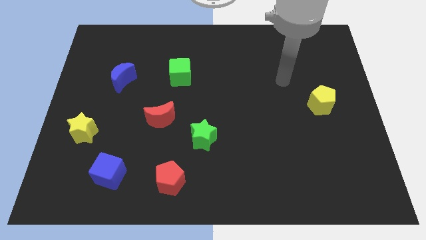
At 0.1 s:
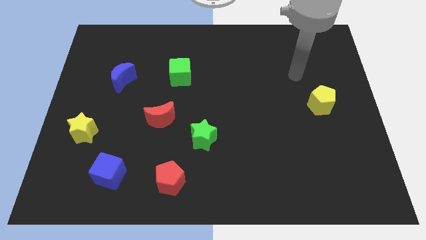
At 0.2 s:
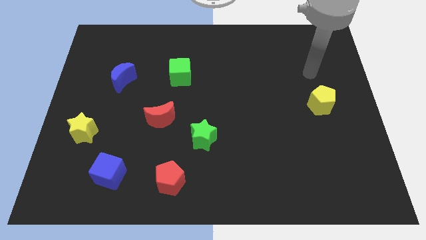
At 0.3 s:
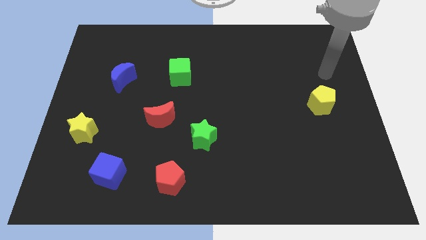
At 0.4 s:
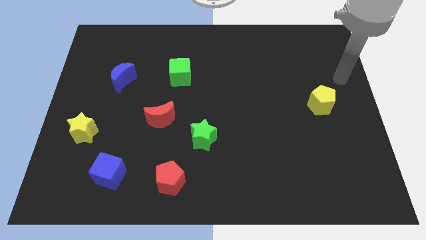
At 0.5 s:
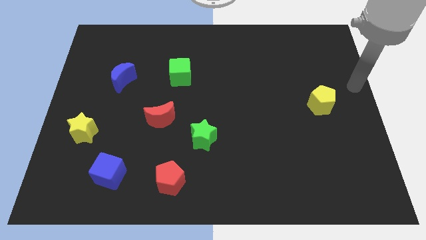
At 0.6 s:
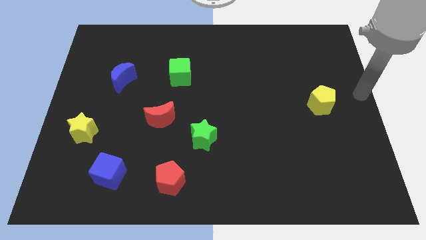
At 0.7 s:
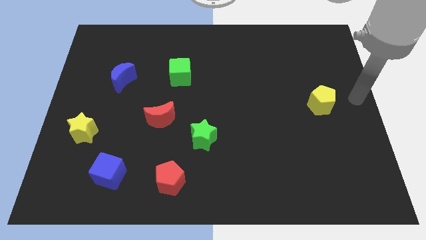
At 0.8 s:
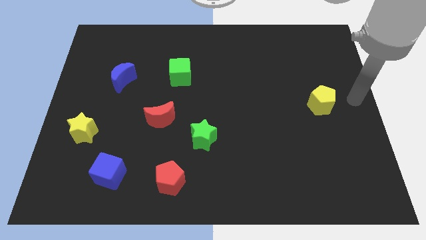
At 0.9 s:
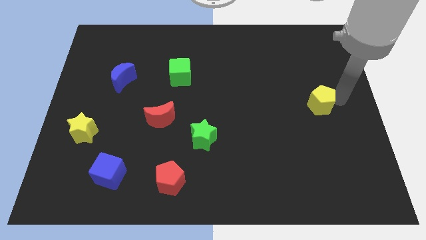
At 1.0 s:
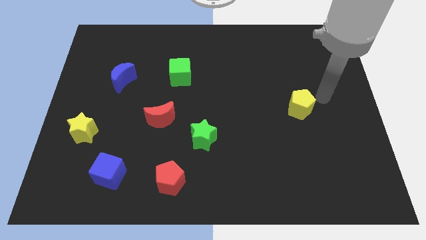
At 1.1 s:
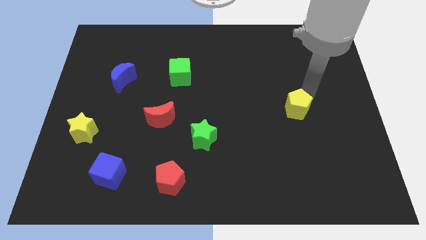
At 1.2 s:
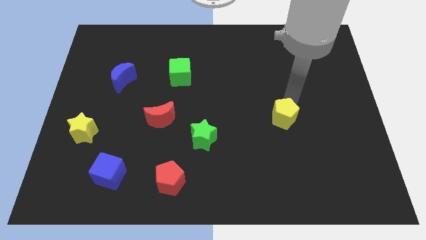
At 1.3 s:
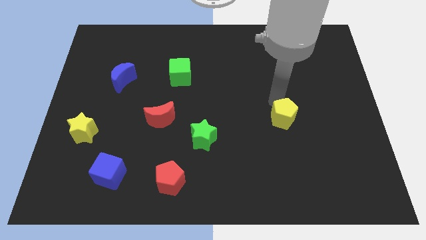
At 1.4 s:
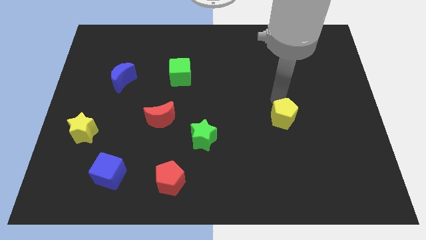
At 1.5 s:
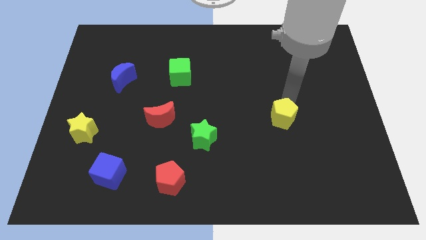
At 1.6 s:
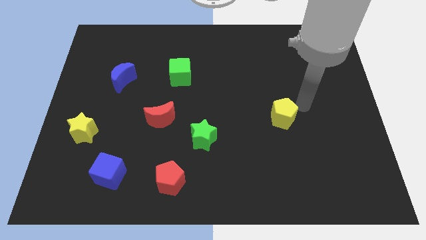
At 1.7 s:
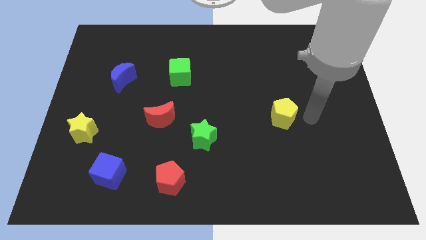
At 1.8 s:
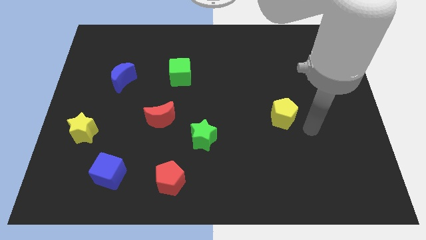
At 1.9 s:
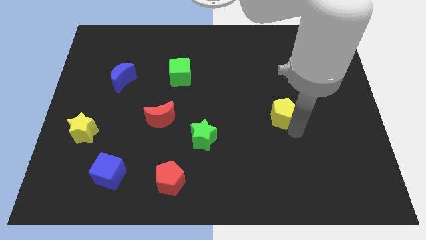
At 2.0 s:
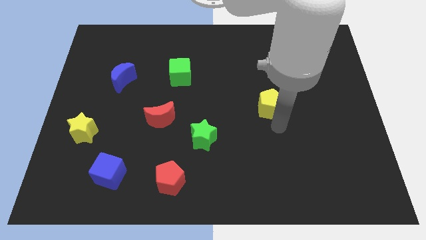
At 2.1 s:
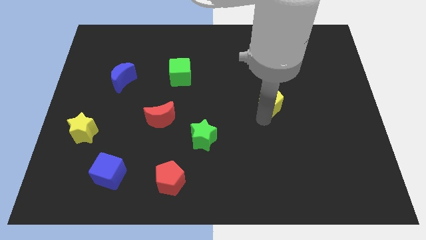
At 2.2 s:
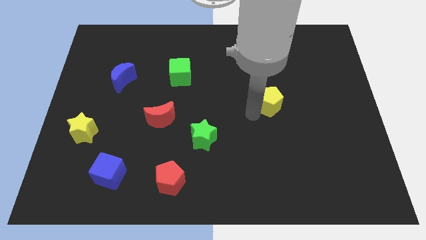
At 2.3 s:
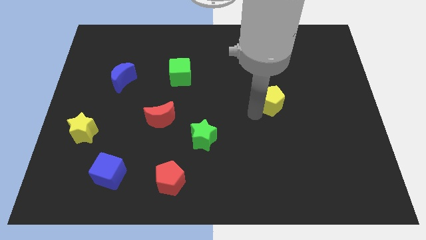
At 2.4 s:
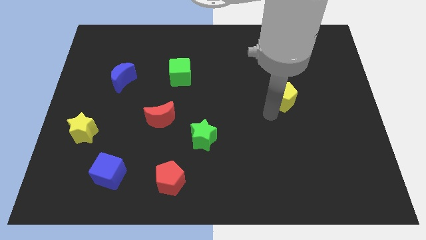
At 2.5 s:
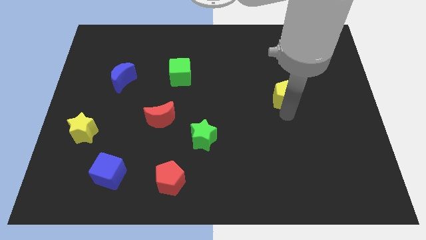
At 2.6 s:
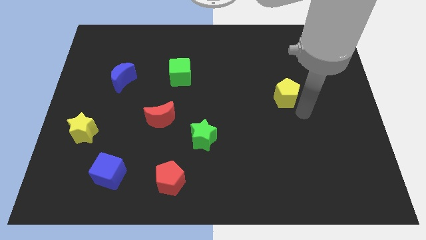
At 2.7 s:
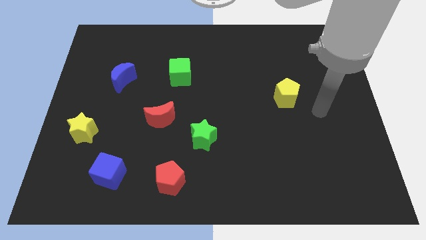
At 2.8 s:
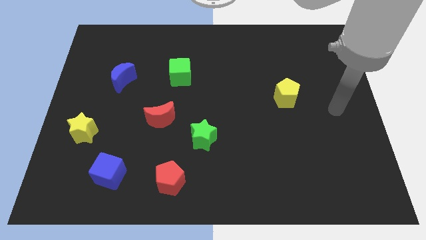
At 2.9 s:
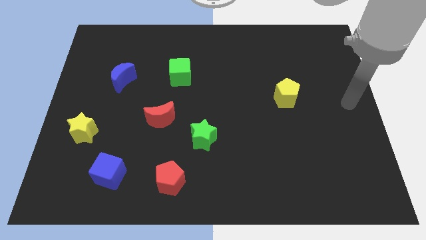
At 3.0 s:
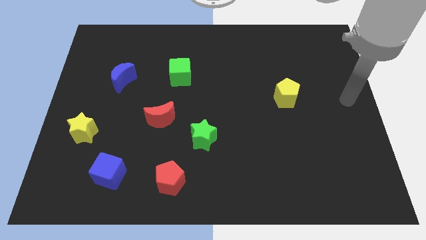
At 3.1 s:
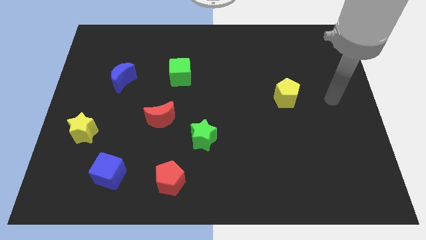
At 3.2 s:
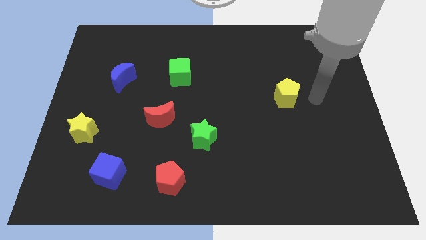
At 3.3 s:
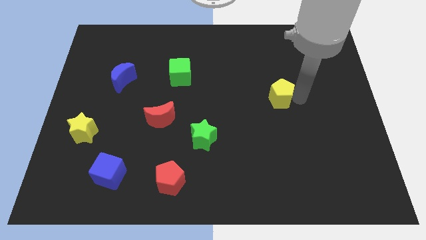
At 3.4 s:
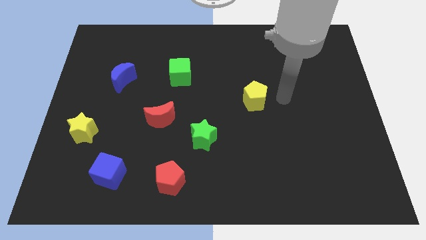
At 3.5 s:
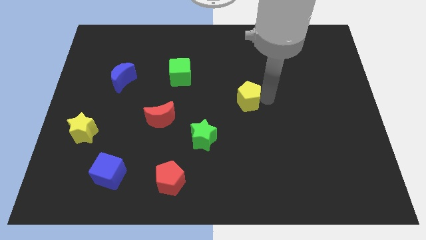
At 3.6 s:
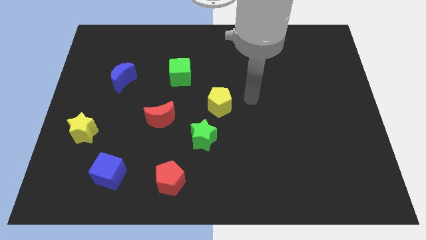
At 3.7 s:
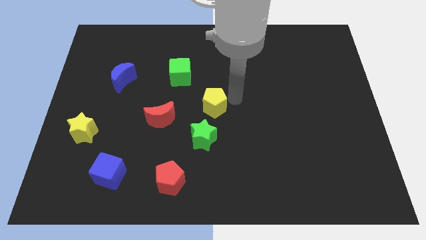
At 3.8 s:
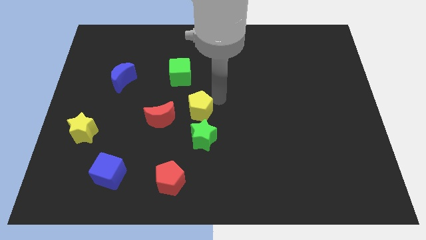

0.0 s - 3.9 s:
move the yellow pentagon to the center of the board

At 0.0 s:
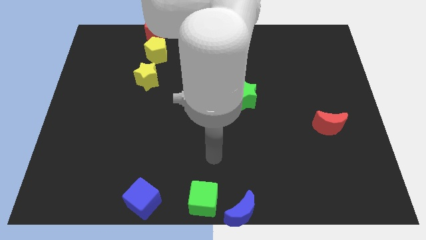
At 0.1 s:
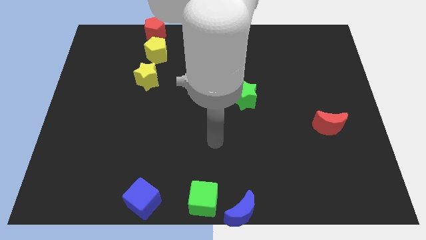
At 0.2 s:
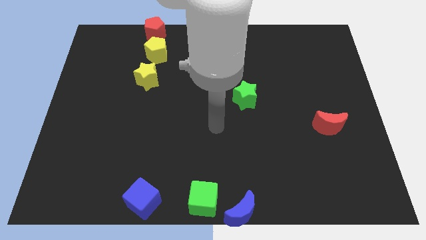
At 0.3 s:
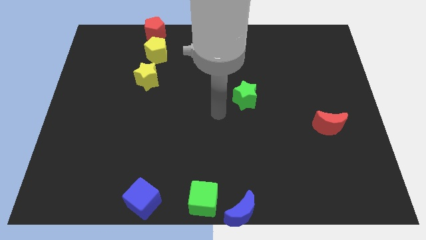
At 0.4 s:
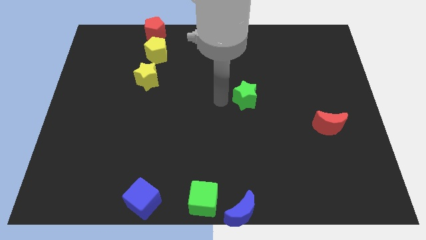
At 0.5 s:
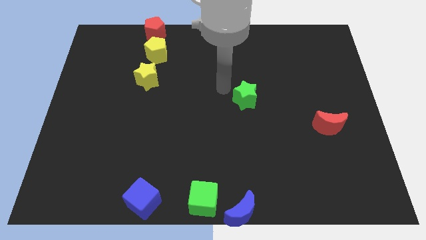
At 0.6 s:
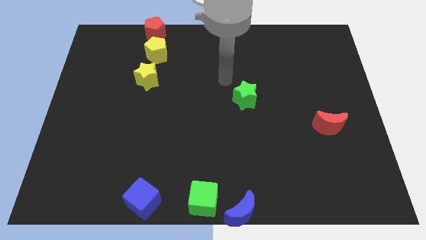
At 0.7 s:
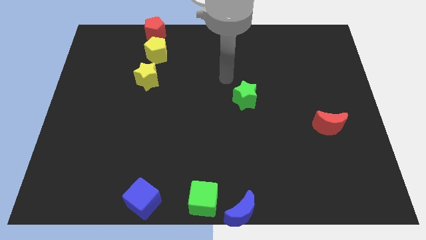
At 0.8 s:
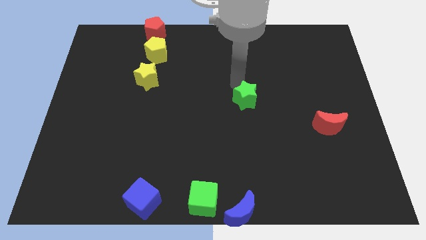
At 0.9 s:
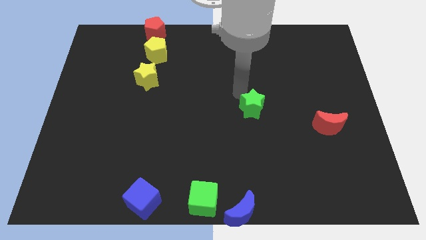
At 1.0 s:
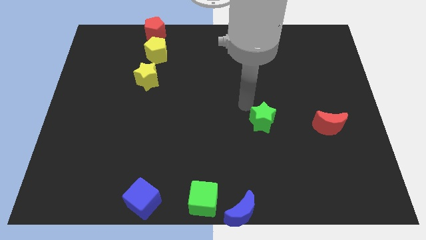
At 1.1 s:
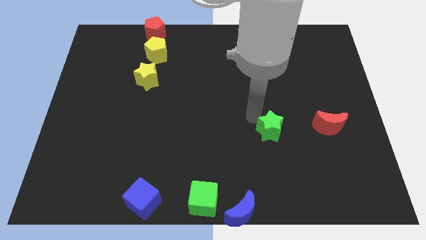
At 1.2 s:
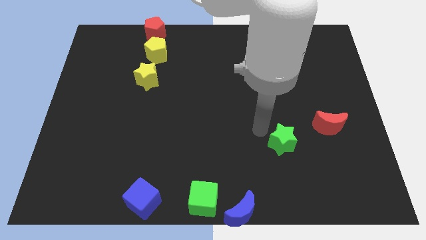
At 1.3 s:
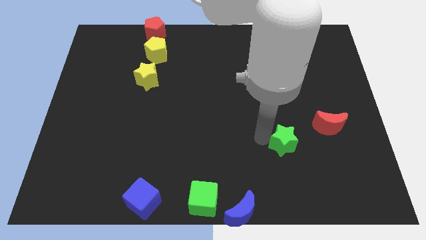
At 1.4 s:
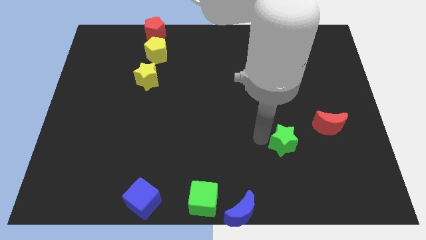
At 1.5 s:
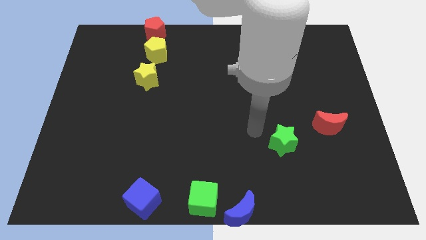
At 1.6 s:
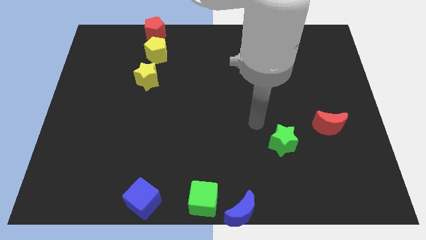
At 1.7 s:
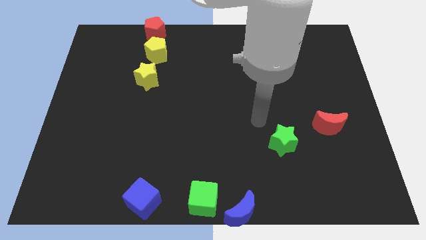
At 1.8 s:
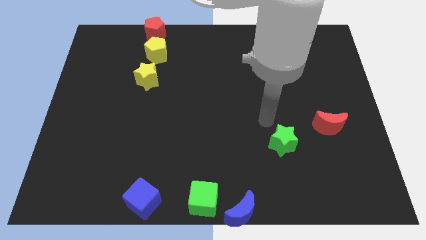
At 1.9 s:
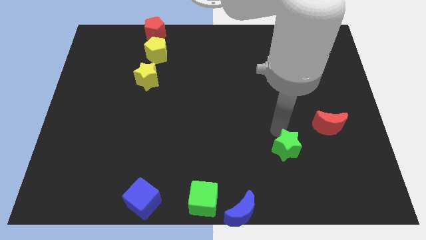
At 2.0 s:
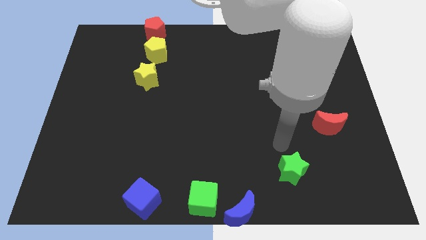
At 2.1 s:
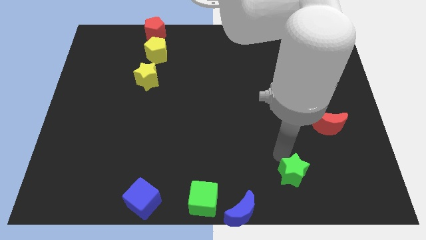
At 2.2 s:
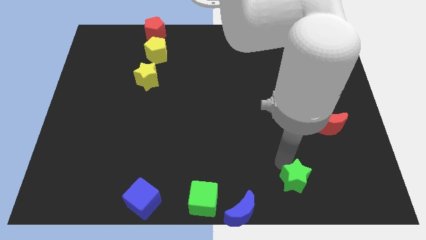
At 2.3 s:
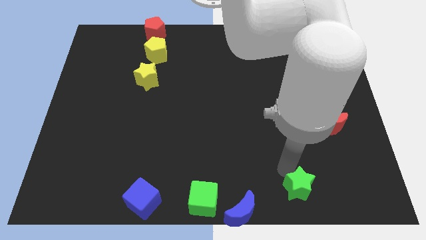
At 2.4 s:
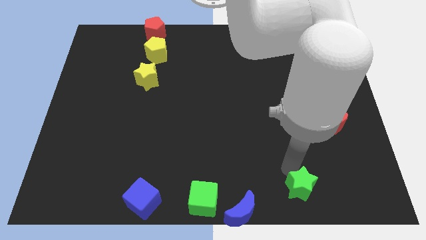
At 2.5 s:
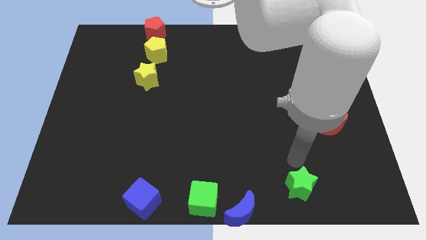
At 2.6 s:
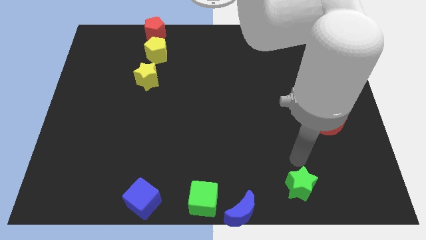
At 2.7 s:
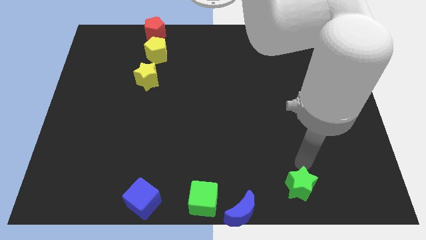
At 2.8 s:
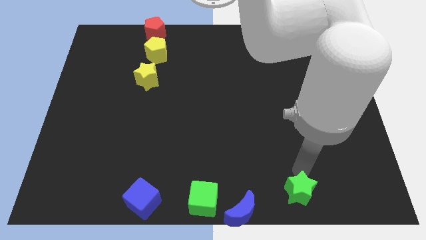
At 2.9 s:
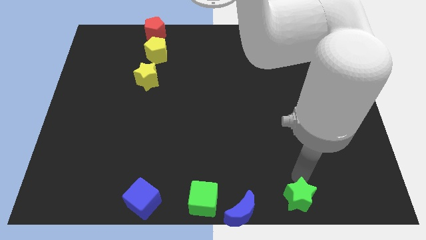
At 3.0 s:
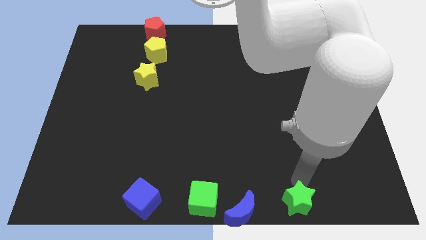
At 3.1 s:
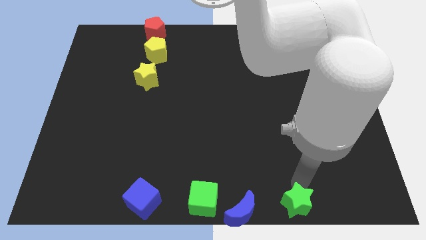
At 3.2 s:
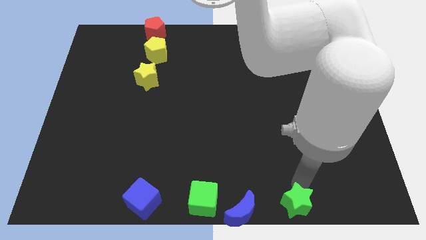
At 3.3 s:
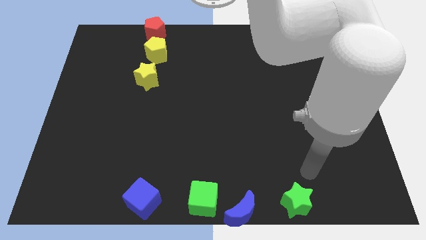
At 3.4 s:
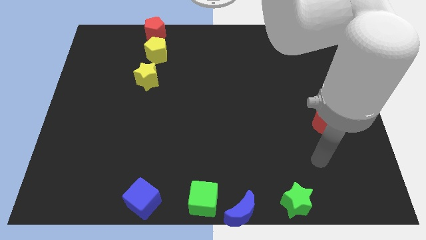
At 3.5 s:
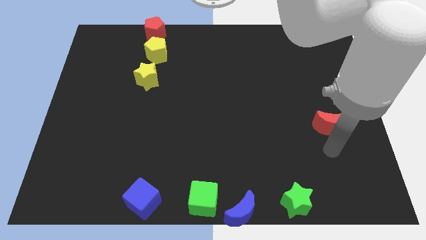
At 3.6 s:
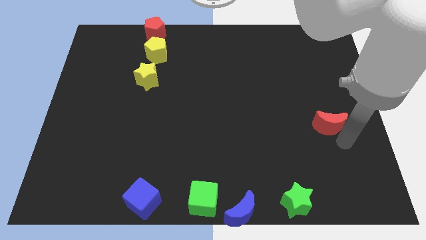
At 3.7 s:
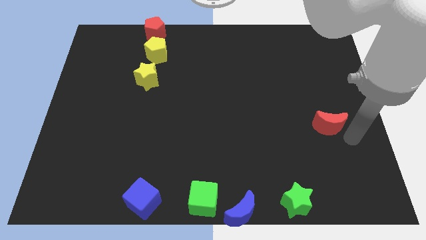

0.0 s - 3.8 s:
move the green star to the right of the blue moon

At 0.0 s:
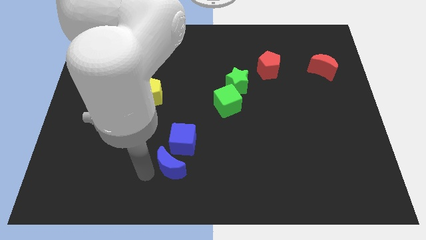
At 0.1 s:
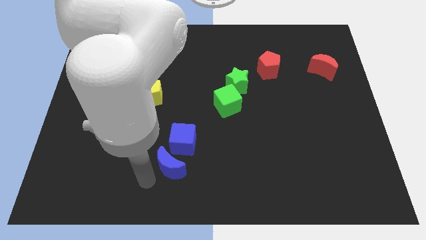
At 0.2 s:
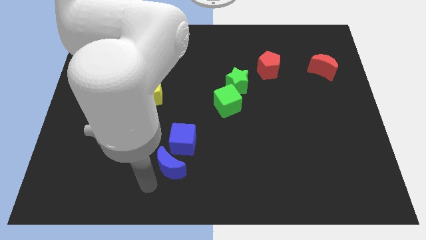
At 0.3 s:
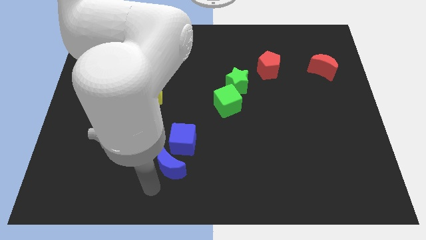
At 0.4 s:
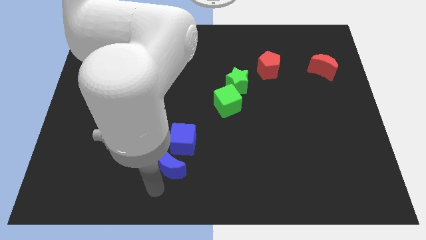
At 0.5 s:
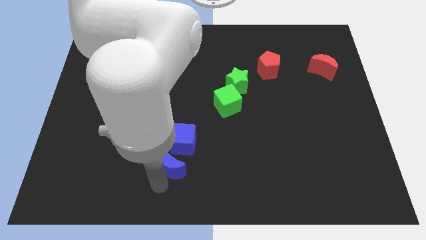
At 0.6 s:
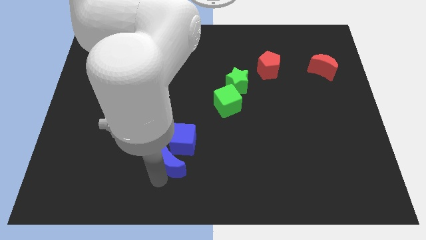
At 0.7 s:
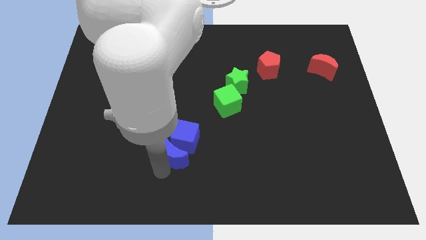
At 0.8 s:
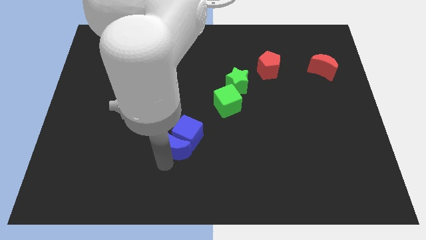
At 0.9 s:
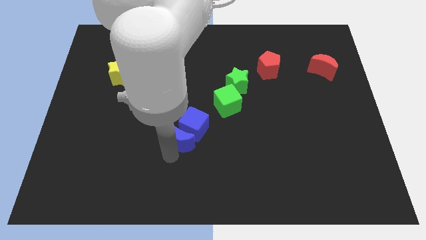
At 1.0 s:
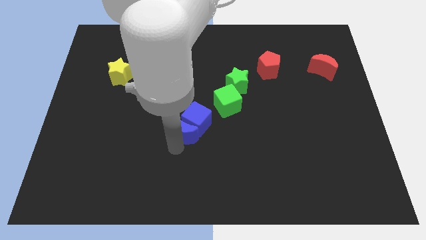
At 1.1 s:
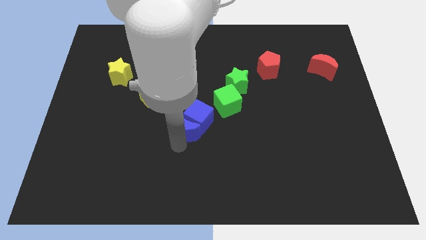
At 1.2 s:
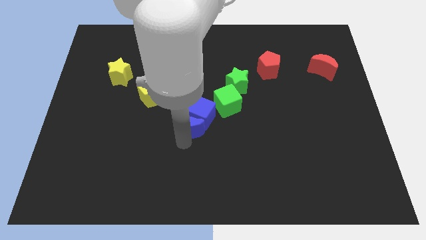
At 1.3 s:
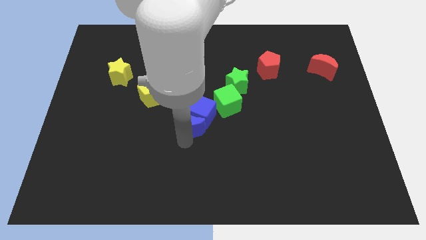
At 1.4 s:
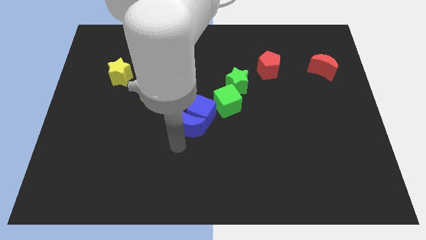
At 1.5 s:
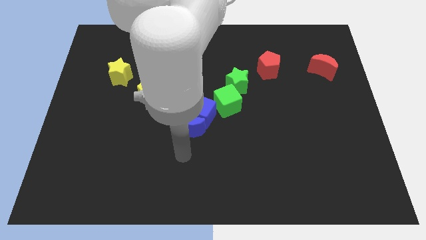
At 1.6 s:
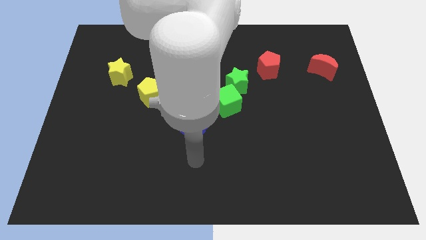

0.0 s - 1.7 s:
push the blue cube with the help of blue crescent towards the left side of the green cube
